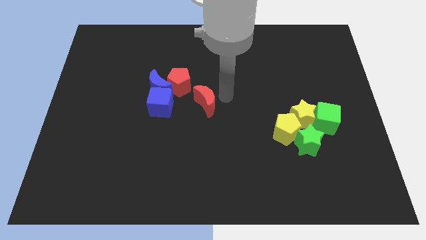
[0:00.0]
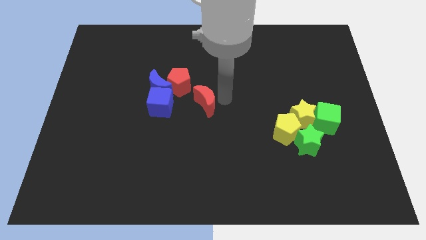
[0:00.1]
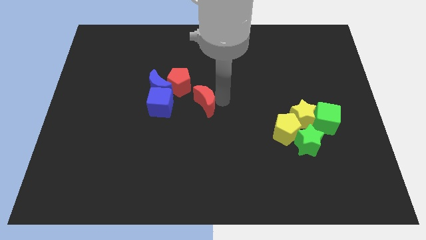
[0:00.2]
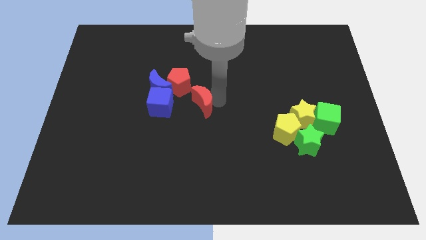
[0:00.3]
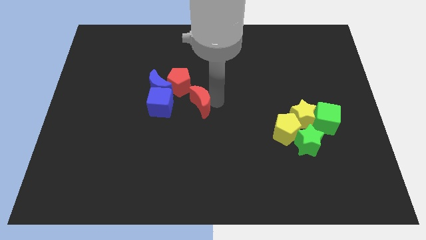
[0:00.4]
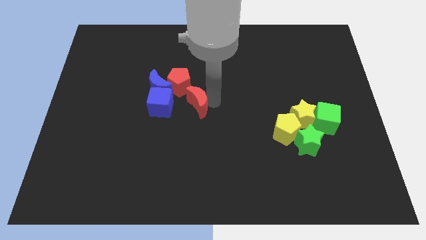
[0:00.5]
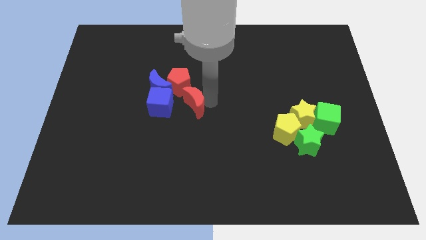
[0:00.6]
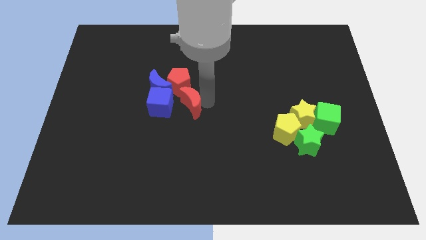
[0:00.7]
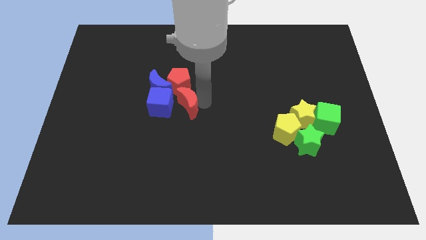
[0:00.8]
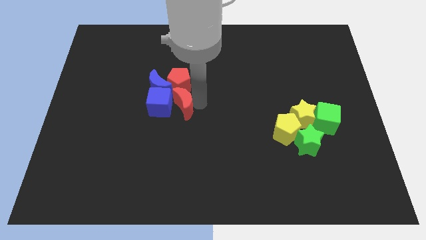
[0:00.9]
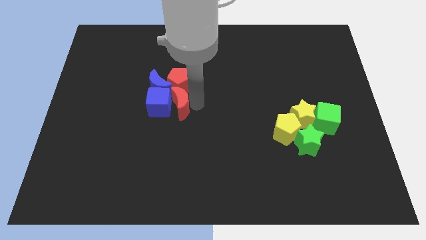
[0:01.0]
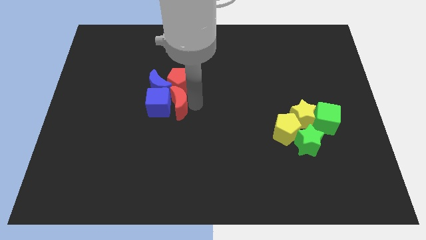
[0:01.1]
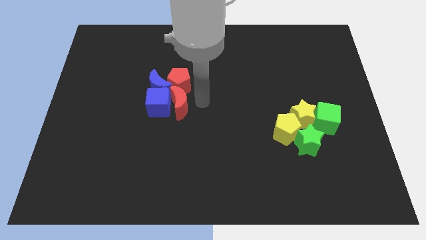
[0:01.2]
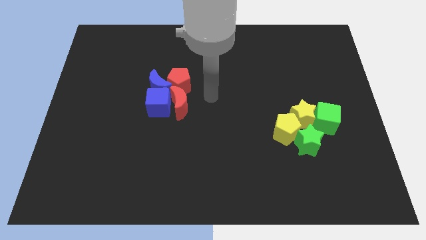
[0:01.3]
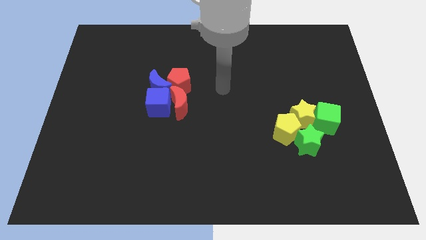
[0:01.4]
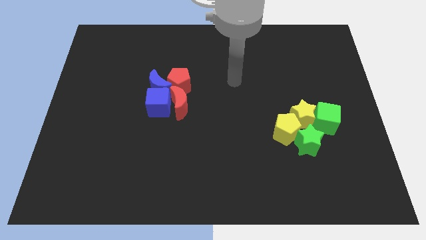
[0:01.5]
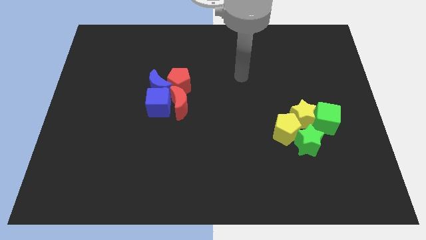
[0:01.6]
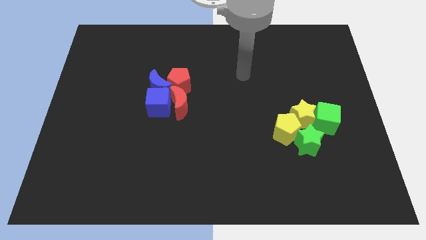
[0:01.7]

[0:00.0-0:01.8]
place the red crescent beside the blue cube

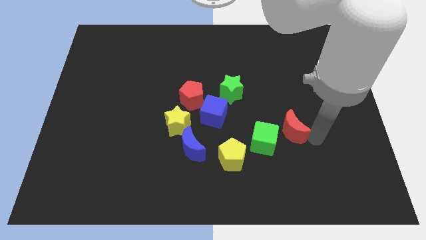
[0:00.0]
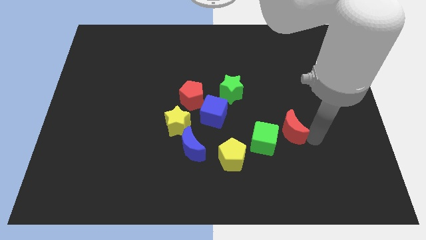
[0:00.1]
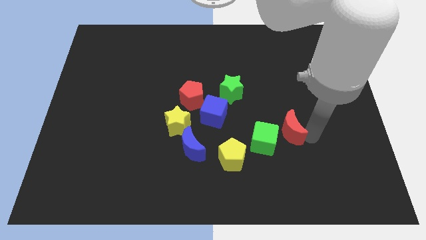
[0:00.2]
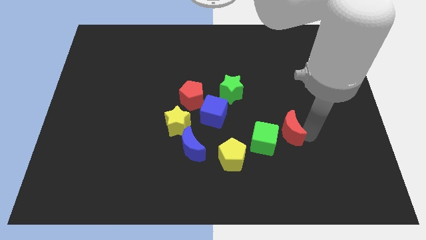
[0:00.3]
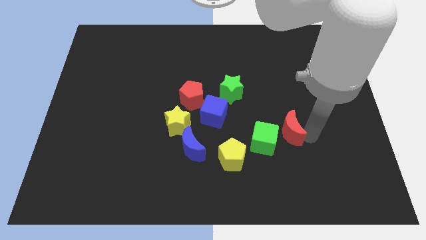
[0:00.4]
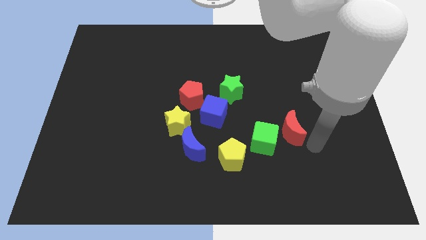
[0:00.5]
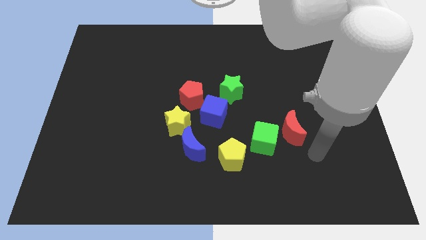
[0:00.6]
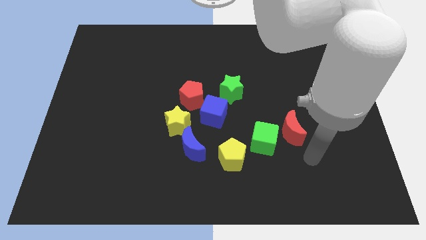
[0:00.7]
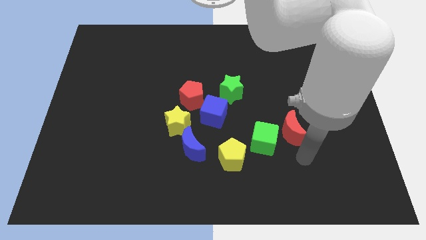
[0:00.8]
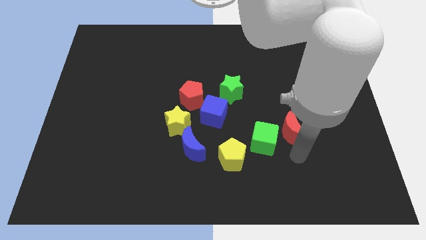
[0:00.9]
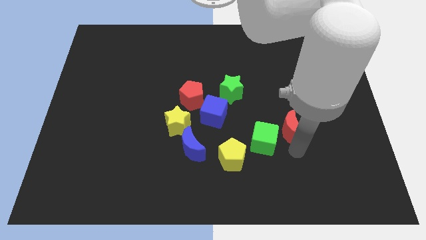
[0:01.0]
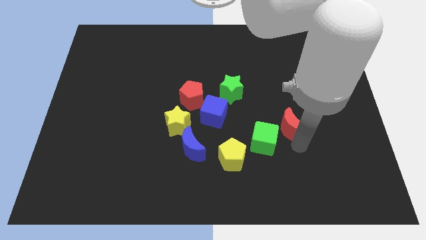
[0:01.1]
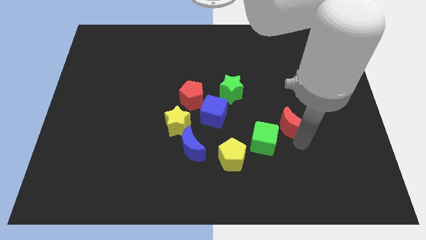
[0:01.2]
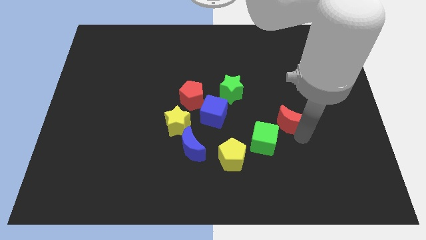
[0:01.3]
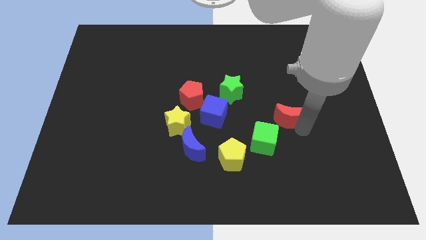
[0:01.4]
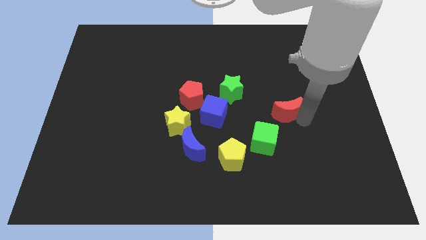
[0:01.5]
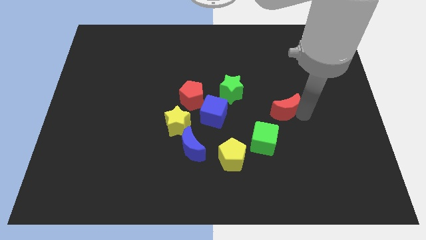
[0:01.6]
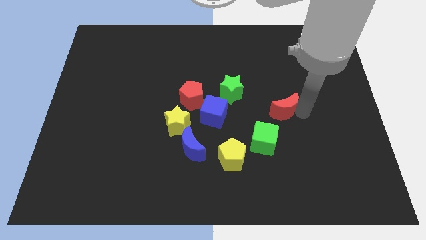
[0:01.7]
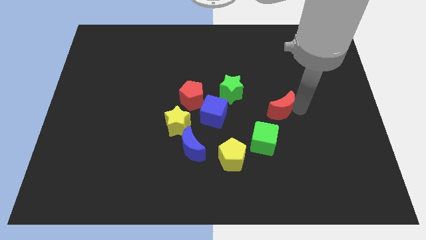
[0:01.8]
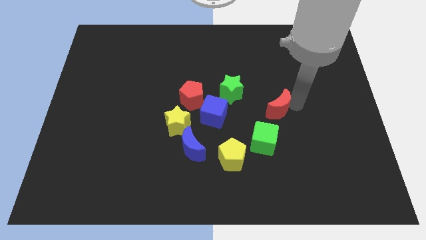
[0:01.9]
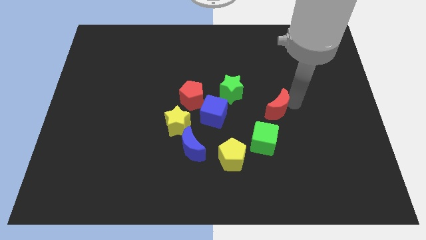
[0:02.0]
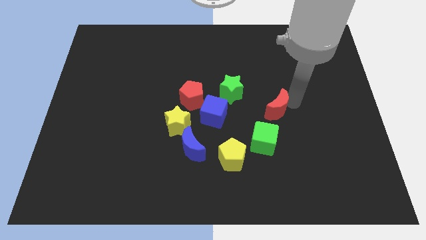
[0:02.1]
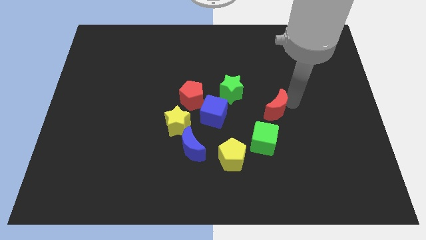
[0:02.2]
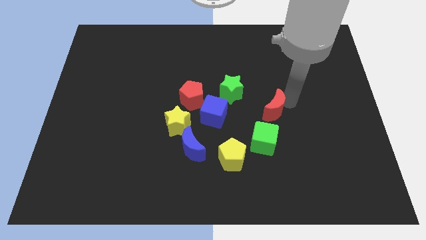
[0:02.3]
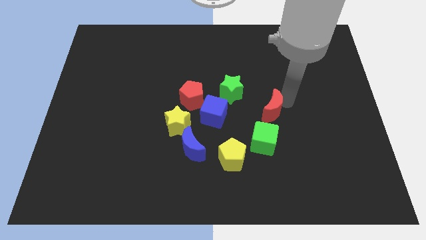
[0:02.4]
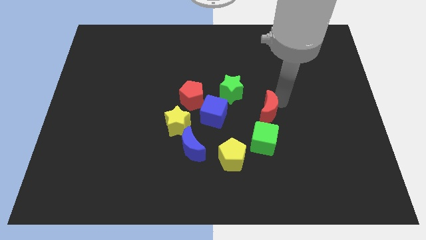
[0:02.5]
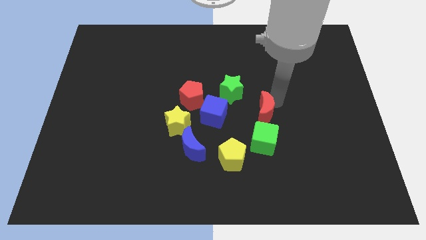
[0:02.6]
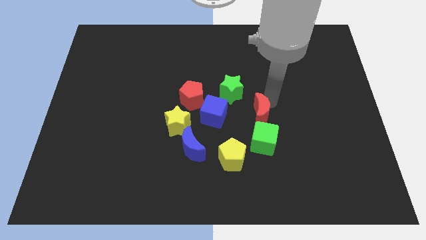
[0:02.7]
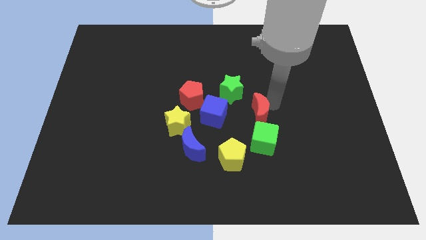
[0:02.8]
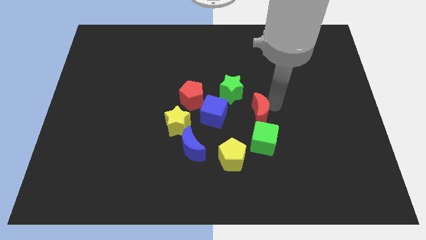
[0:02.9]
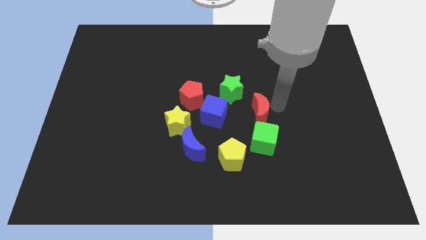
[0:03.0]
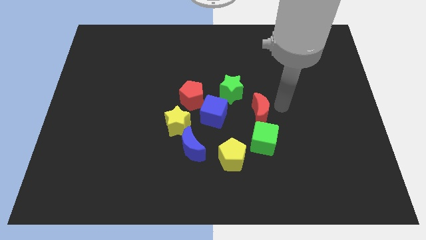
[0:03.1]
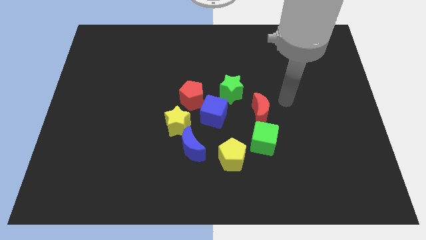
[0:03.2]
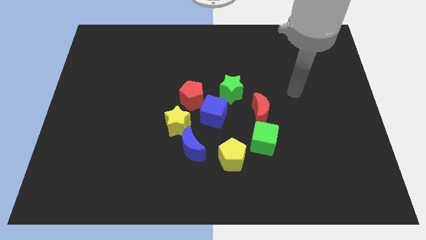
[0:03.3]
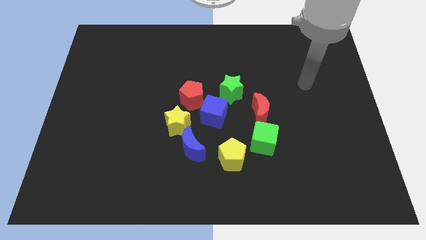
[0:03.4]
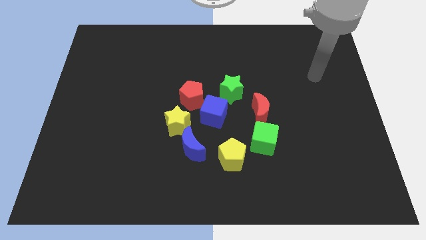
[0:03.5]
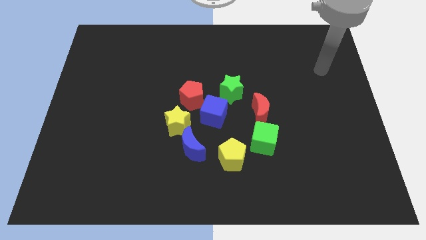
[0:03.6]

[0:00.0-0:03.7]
push the red crescent above the green cube

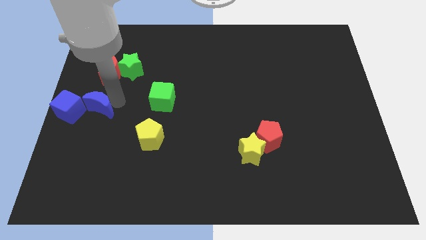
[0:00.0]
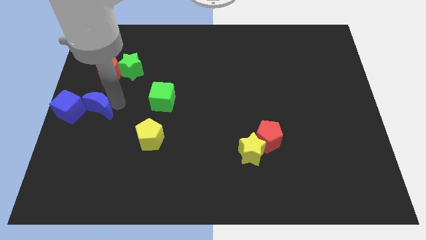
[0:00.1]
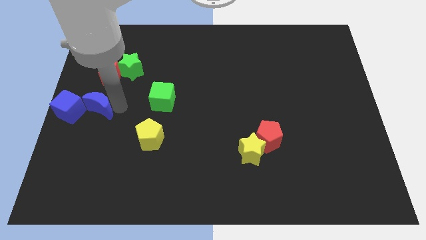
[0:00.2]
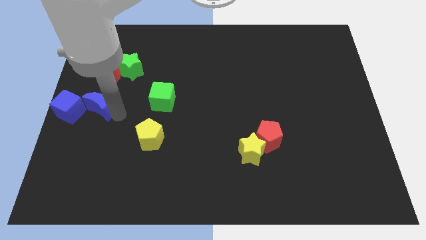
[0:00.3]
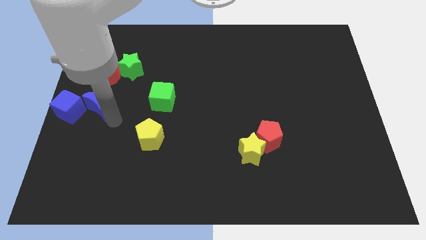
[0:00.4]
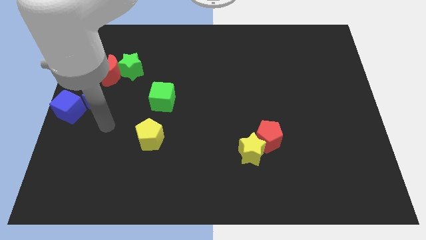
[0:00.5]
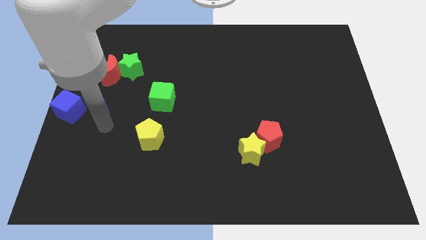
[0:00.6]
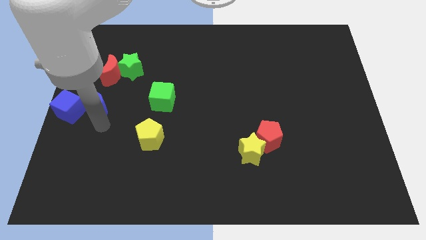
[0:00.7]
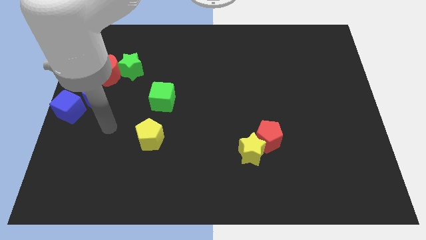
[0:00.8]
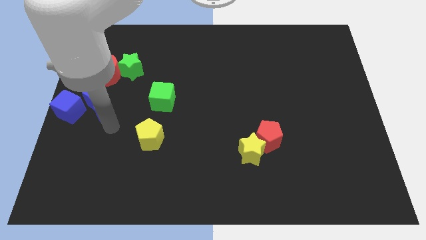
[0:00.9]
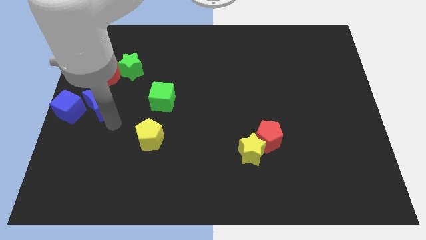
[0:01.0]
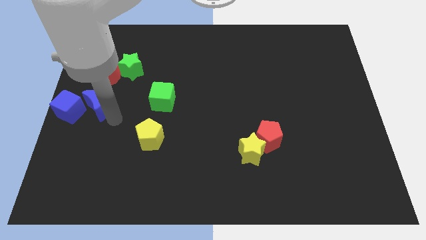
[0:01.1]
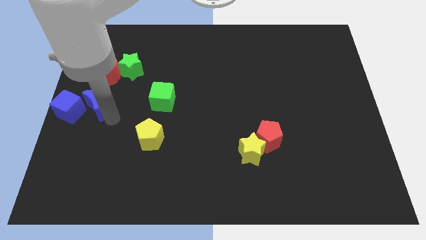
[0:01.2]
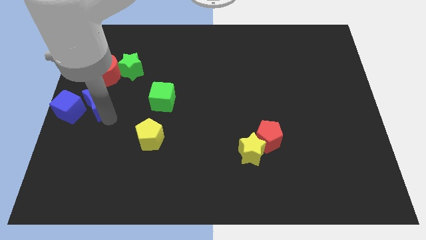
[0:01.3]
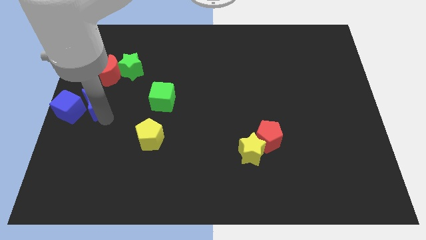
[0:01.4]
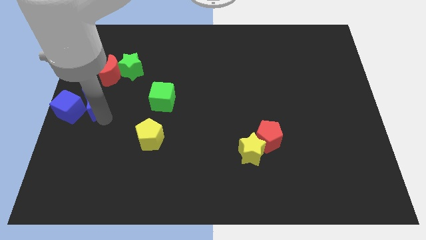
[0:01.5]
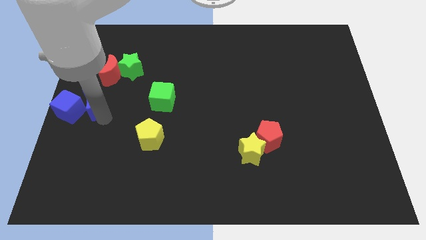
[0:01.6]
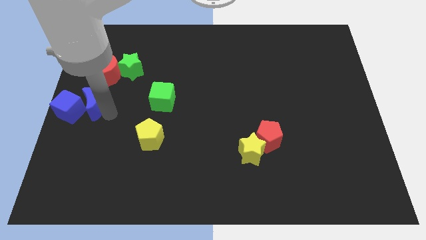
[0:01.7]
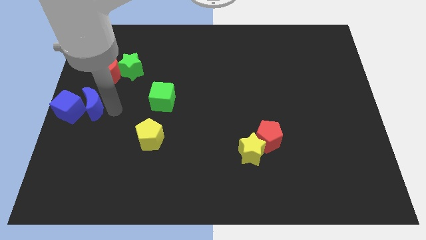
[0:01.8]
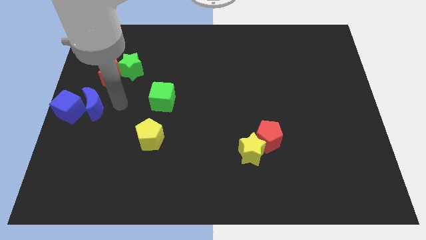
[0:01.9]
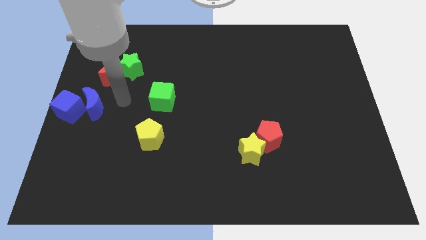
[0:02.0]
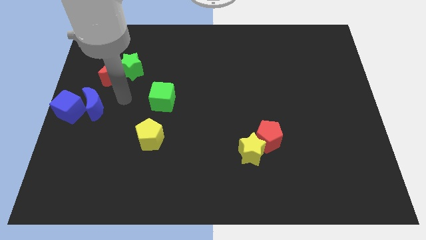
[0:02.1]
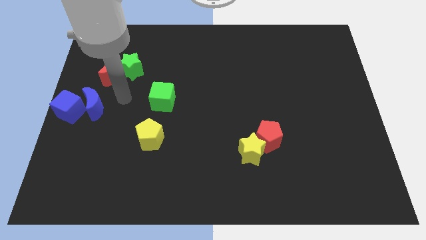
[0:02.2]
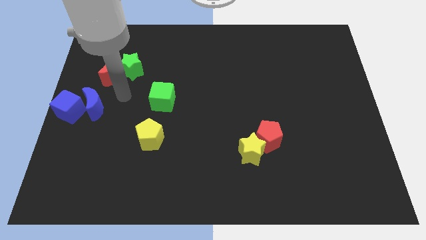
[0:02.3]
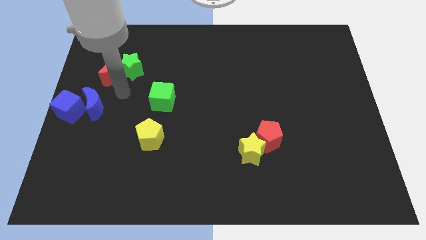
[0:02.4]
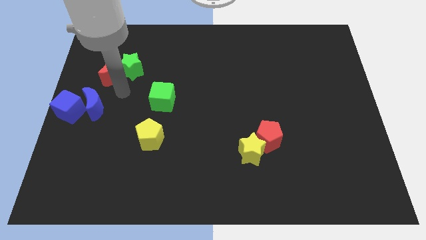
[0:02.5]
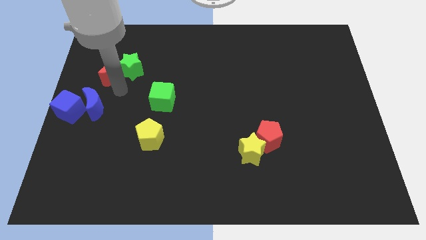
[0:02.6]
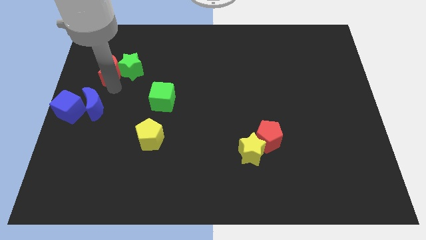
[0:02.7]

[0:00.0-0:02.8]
touch the bottom of red crescent

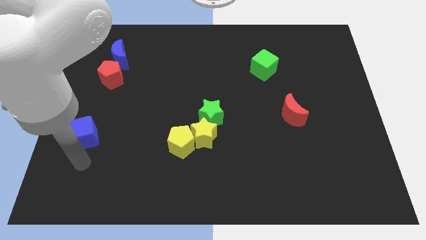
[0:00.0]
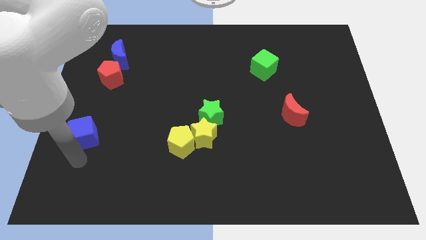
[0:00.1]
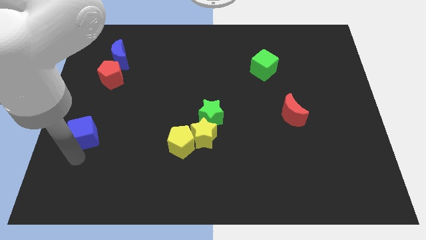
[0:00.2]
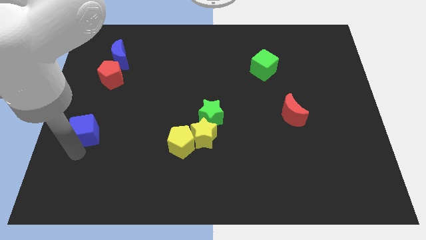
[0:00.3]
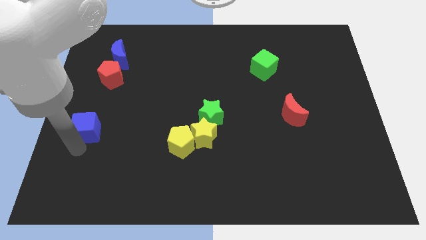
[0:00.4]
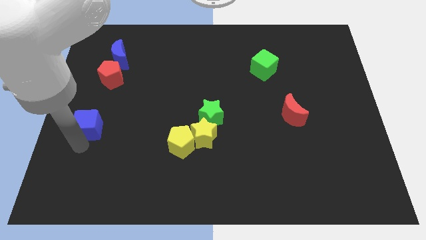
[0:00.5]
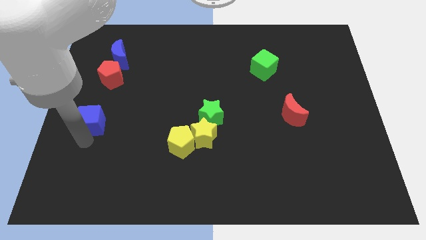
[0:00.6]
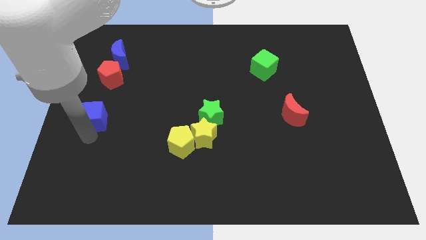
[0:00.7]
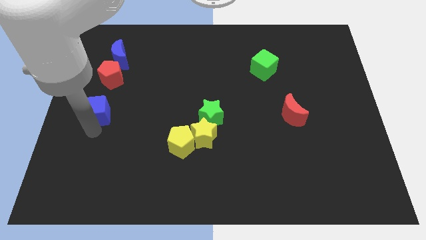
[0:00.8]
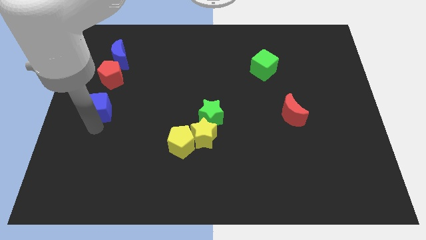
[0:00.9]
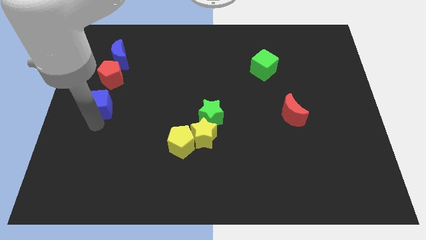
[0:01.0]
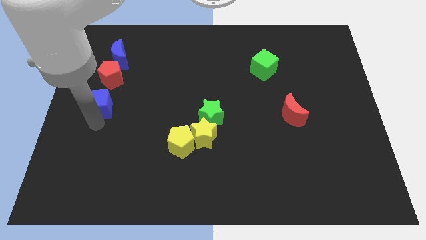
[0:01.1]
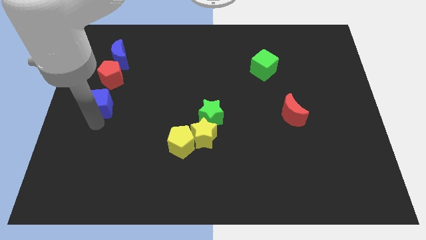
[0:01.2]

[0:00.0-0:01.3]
slide the blue cube diagonally top left to the yellow pentagon
